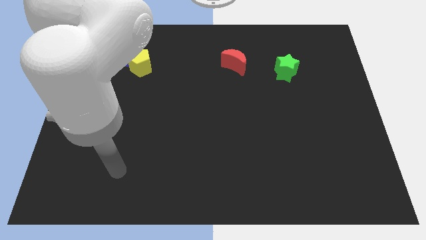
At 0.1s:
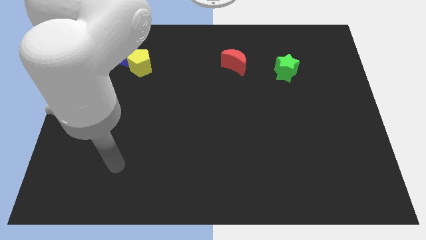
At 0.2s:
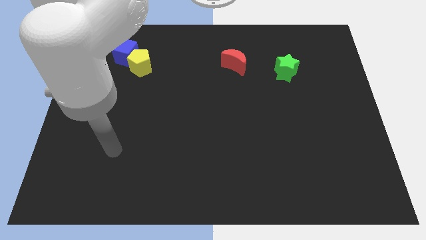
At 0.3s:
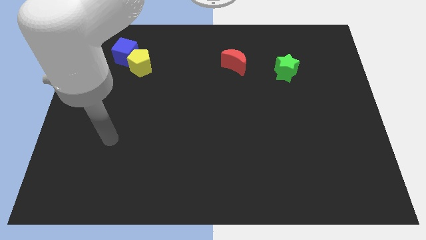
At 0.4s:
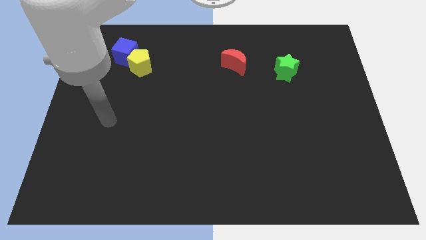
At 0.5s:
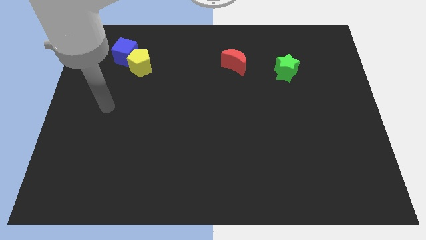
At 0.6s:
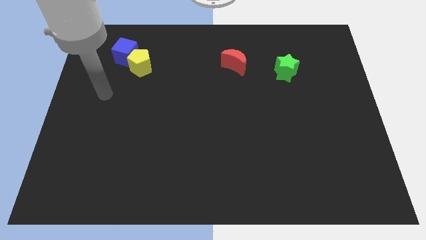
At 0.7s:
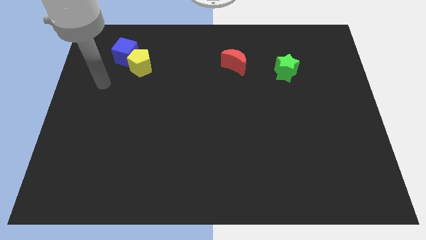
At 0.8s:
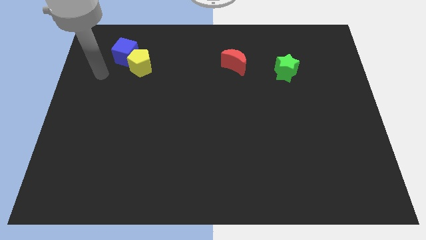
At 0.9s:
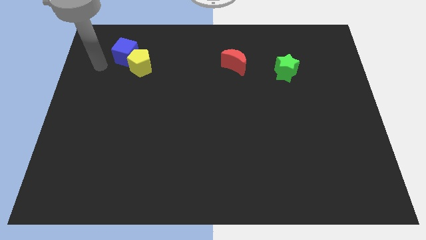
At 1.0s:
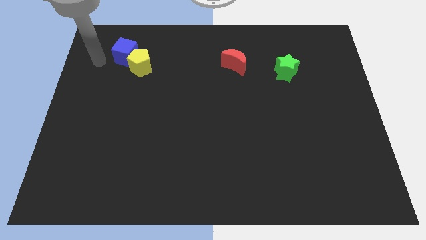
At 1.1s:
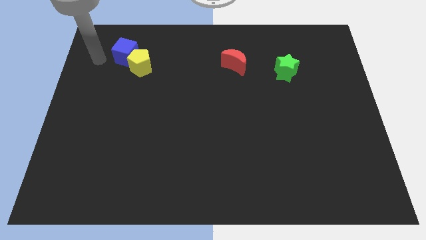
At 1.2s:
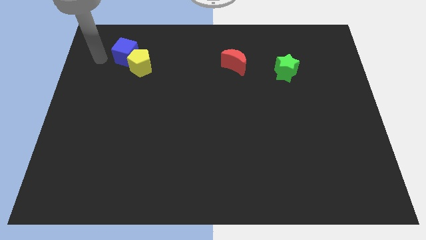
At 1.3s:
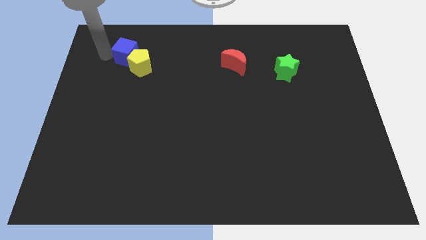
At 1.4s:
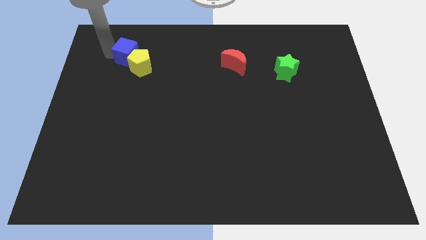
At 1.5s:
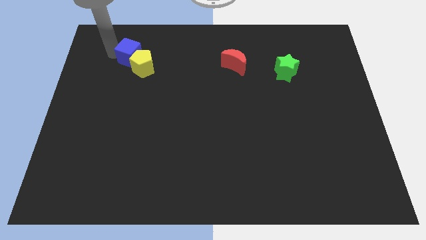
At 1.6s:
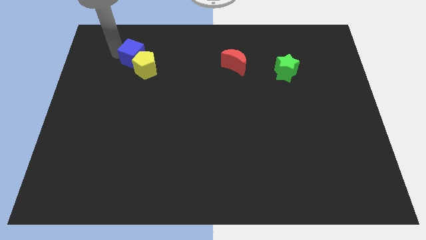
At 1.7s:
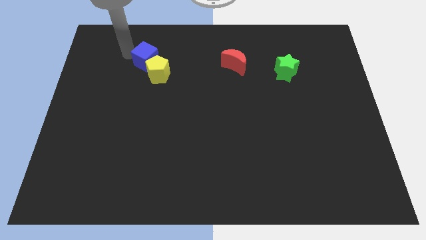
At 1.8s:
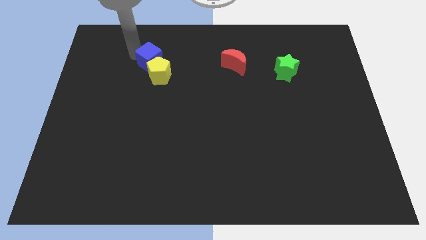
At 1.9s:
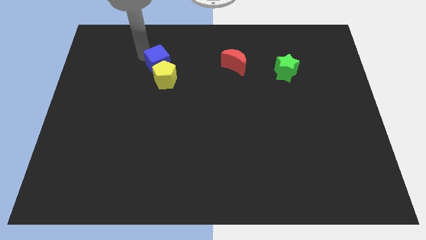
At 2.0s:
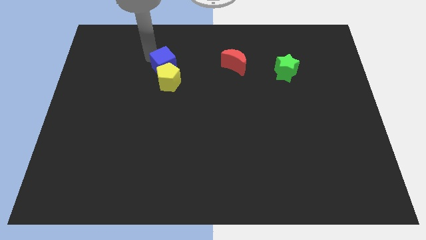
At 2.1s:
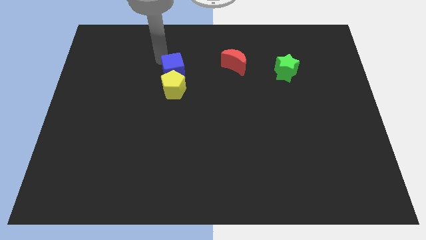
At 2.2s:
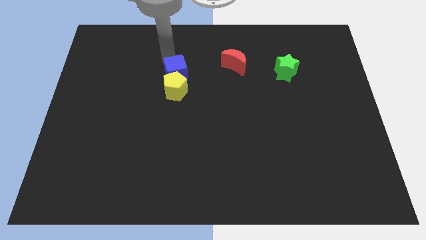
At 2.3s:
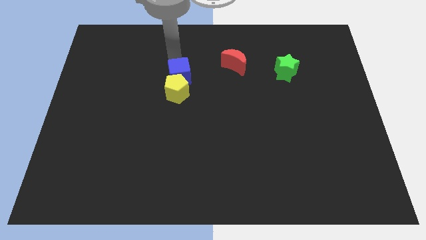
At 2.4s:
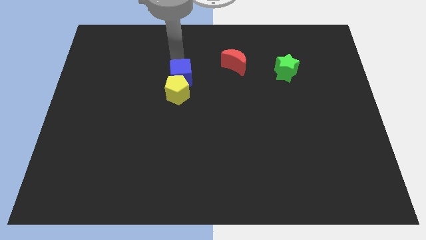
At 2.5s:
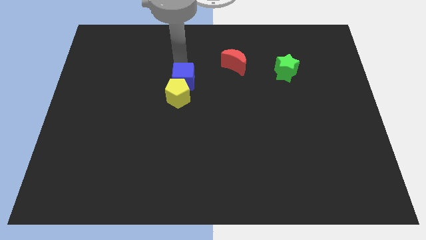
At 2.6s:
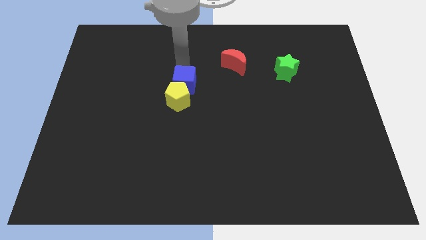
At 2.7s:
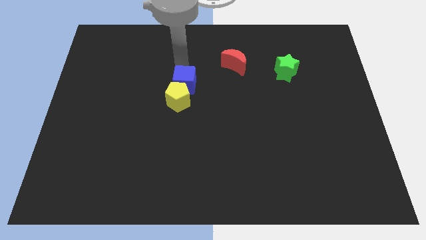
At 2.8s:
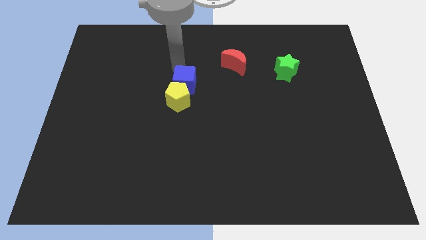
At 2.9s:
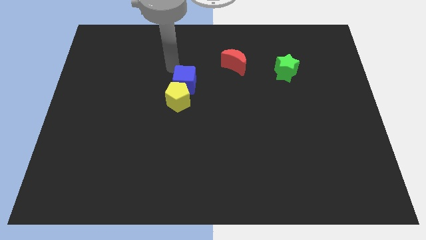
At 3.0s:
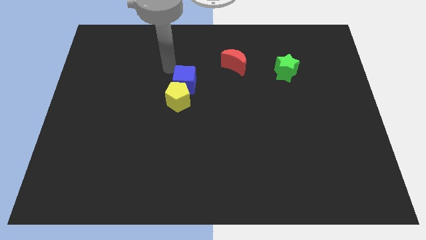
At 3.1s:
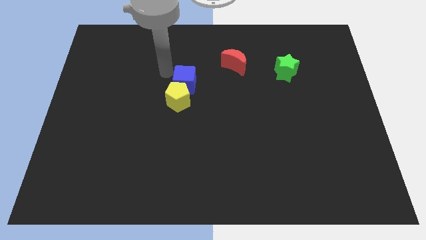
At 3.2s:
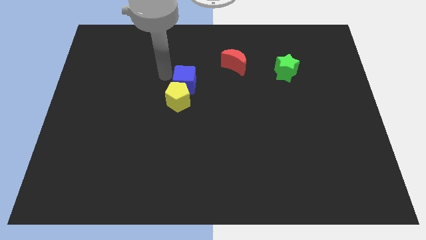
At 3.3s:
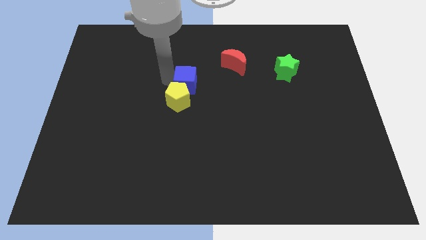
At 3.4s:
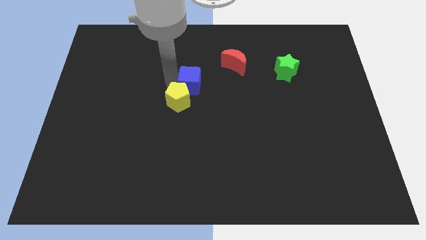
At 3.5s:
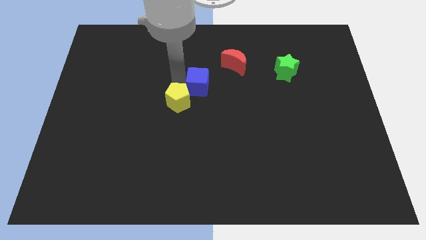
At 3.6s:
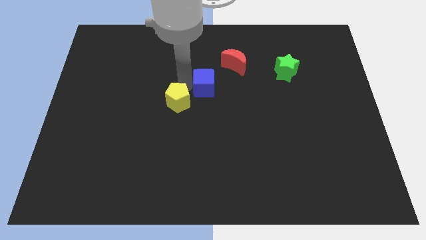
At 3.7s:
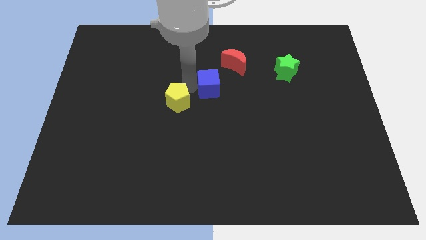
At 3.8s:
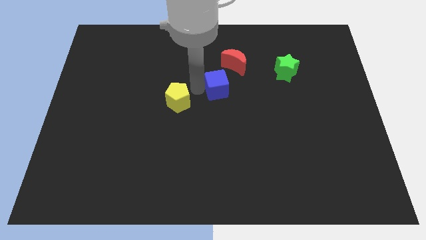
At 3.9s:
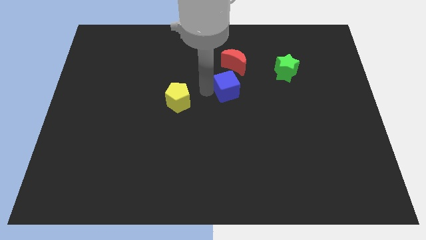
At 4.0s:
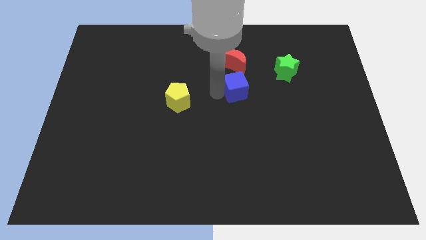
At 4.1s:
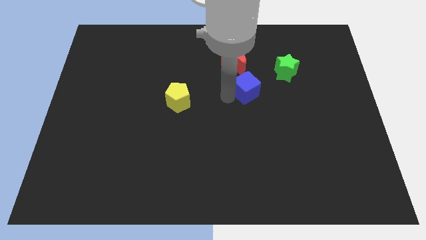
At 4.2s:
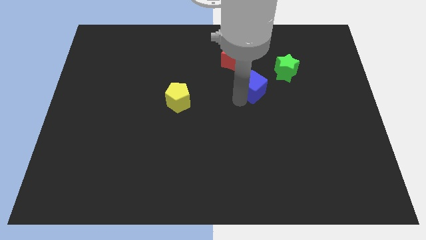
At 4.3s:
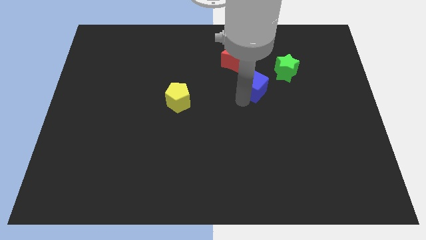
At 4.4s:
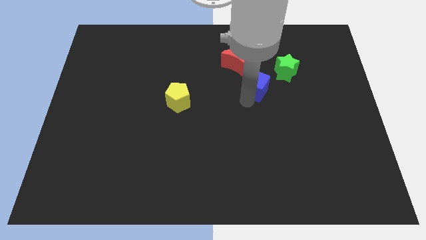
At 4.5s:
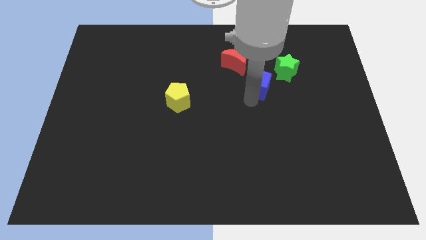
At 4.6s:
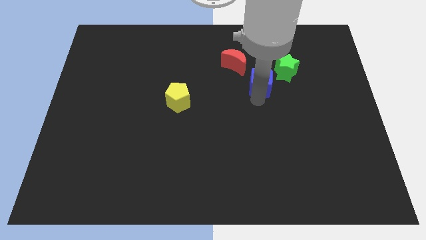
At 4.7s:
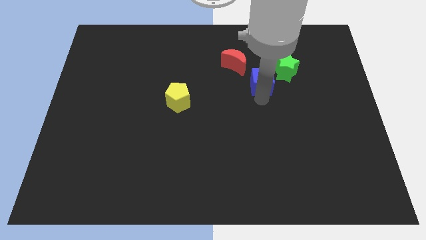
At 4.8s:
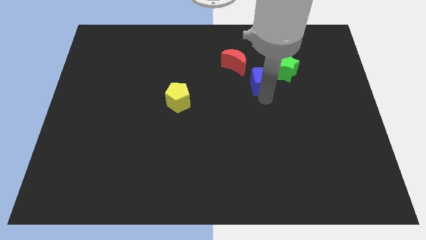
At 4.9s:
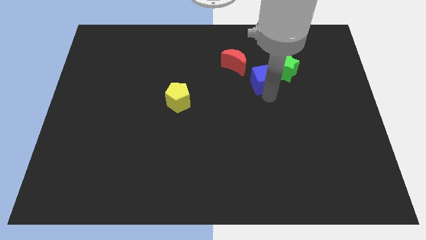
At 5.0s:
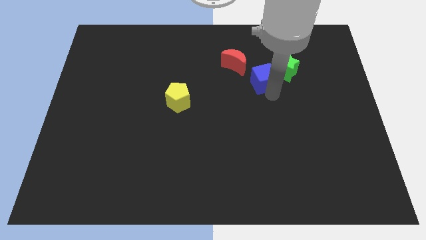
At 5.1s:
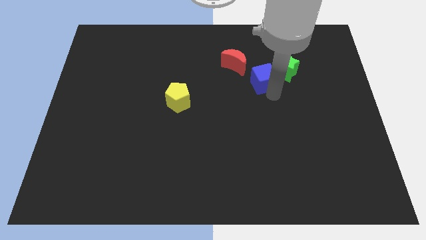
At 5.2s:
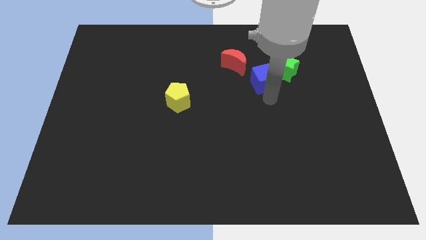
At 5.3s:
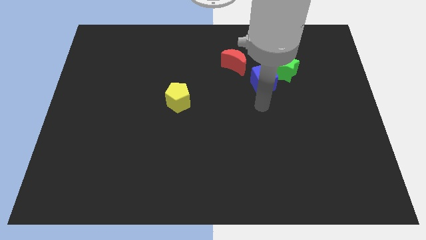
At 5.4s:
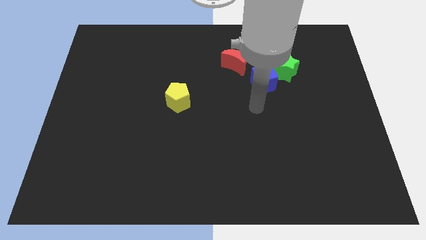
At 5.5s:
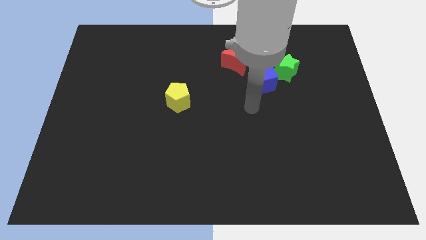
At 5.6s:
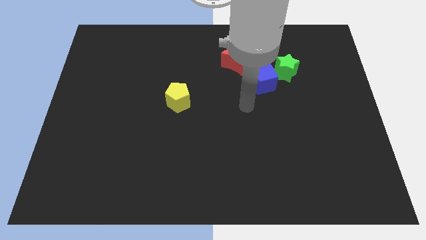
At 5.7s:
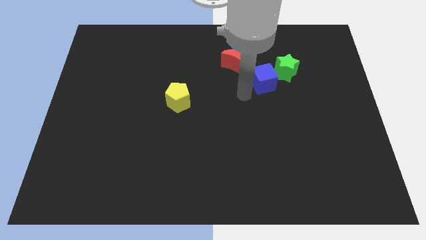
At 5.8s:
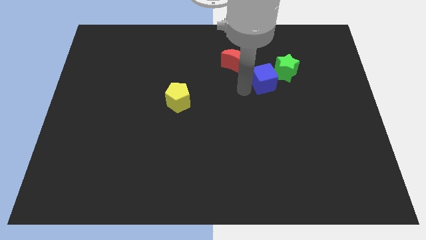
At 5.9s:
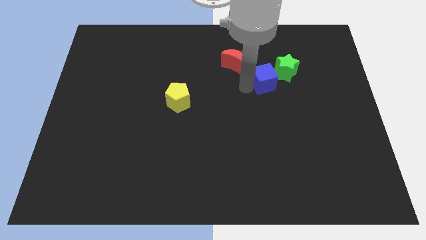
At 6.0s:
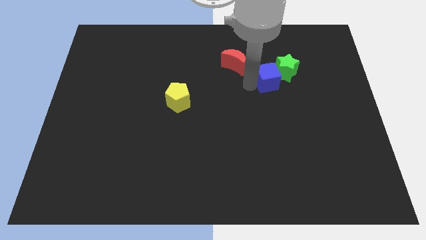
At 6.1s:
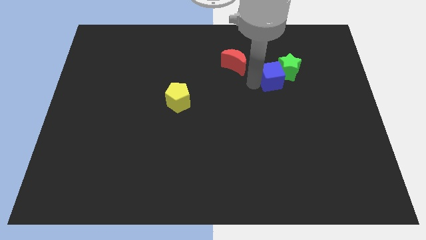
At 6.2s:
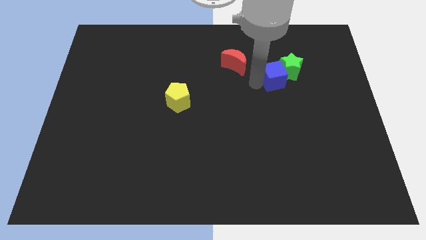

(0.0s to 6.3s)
slide the cube towards the star

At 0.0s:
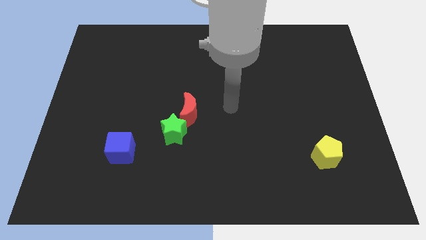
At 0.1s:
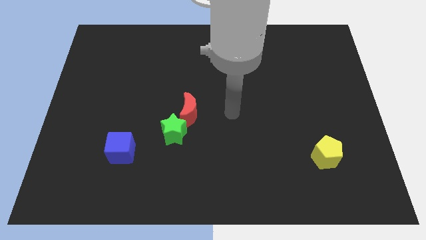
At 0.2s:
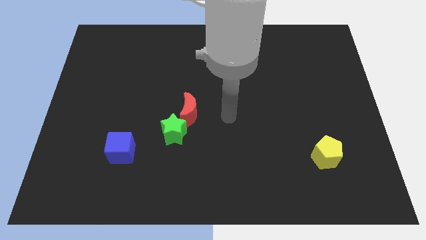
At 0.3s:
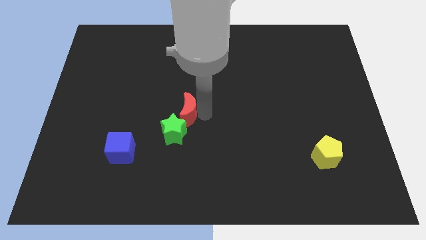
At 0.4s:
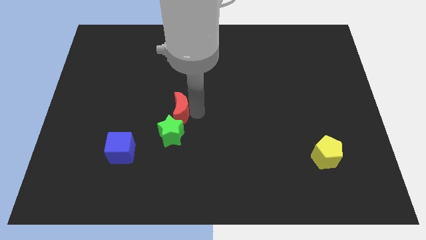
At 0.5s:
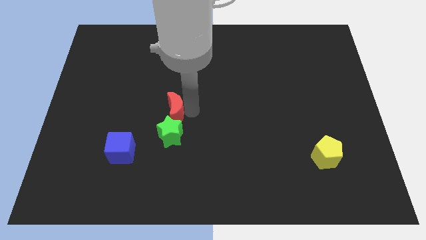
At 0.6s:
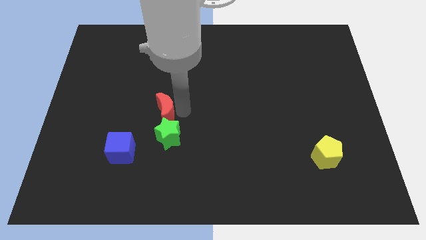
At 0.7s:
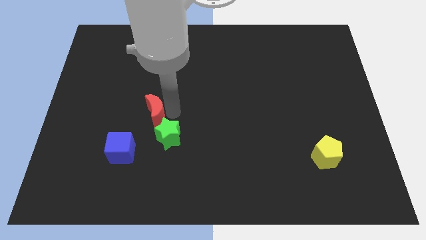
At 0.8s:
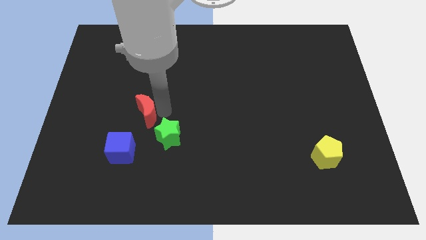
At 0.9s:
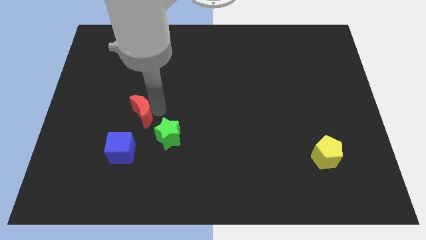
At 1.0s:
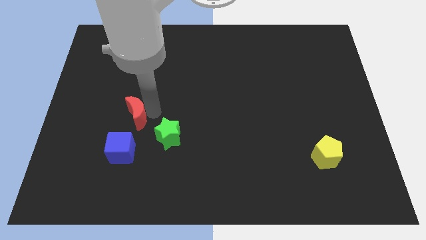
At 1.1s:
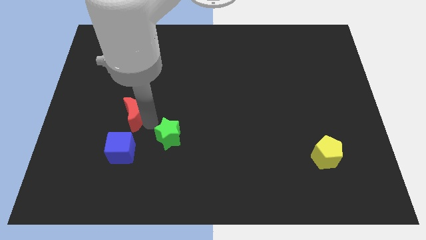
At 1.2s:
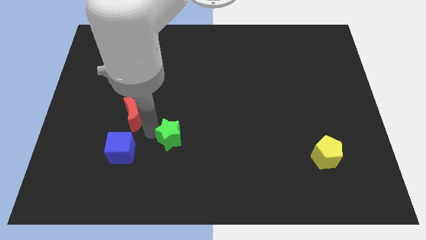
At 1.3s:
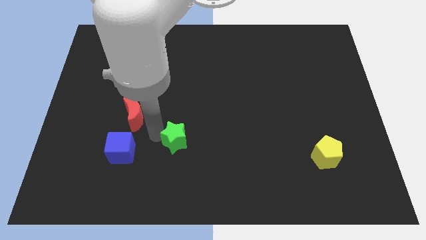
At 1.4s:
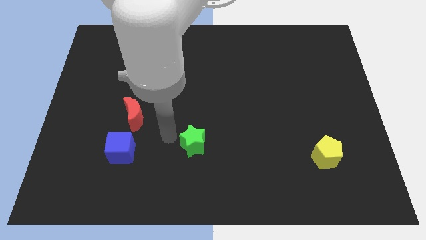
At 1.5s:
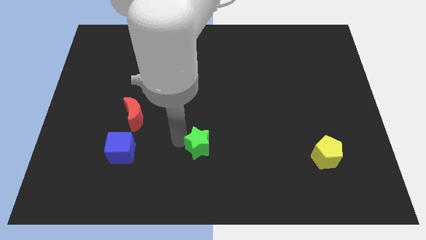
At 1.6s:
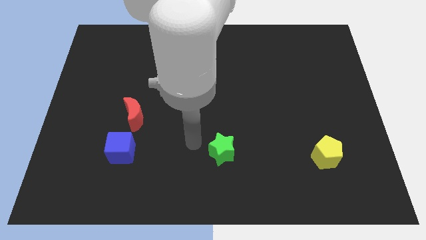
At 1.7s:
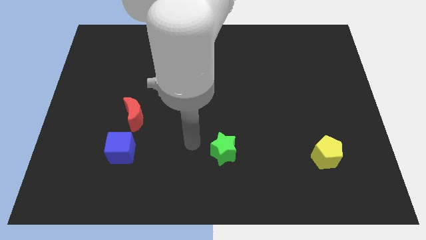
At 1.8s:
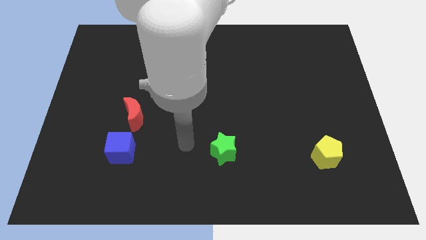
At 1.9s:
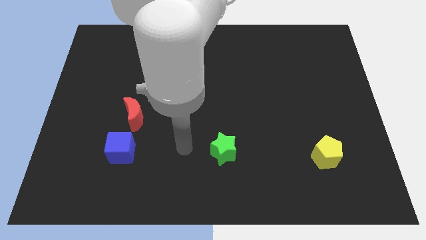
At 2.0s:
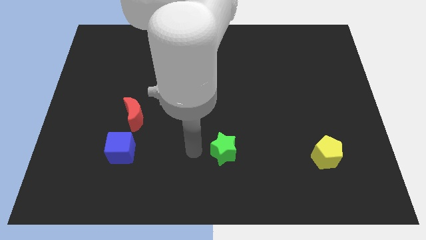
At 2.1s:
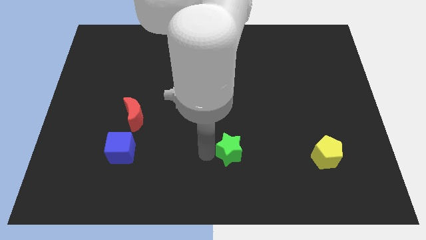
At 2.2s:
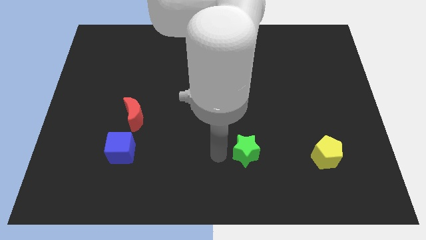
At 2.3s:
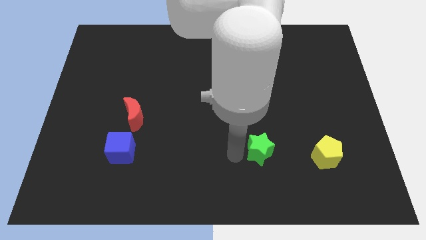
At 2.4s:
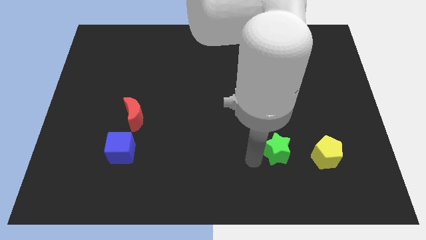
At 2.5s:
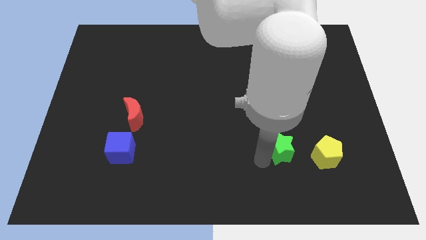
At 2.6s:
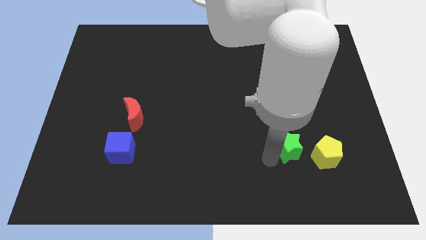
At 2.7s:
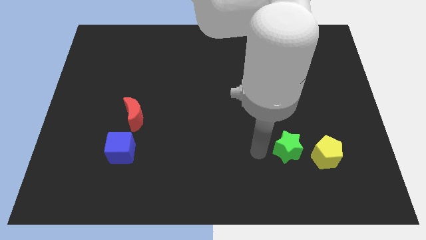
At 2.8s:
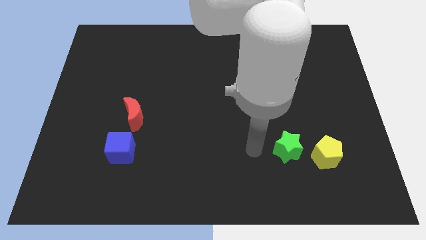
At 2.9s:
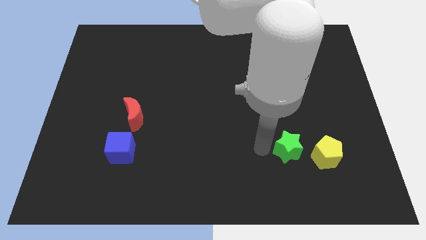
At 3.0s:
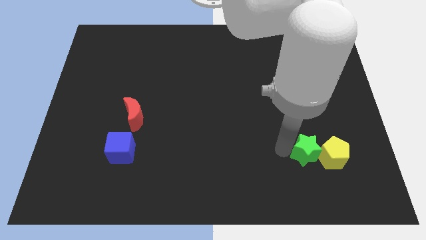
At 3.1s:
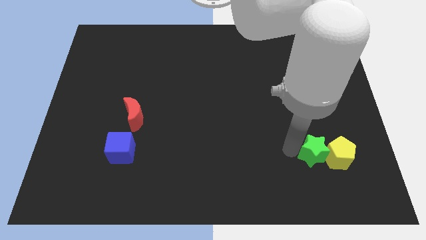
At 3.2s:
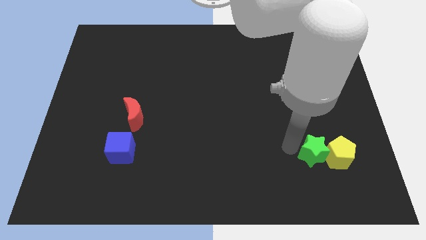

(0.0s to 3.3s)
slide the green block close to the yellow block
